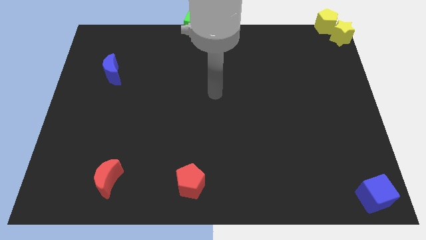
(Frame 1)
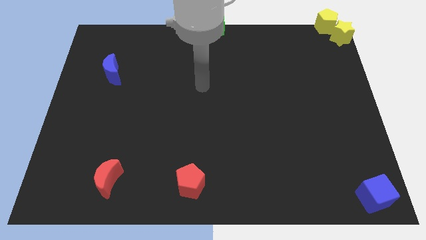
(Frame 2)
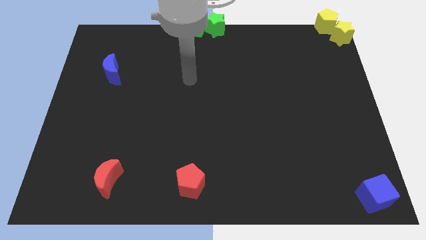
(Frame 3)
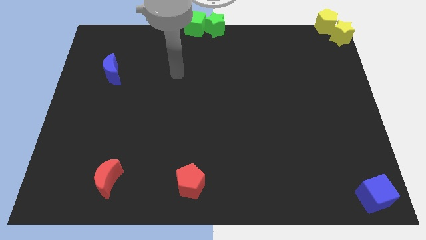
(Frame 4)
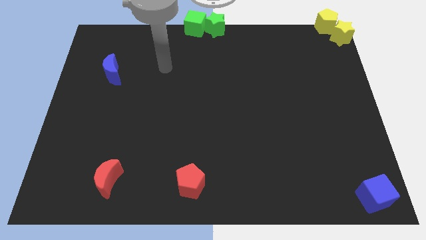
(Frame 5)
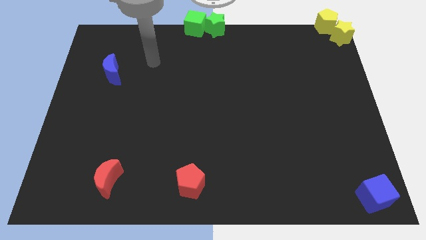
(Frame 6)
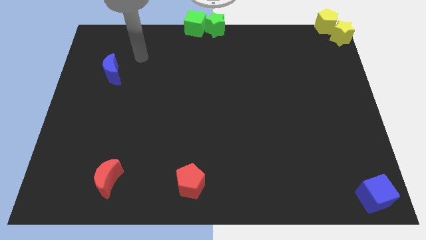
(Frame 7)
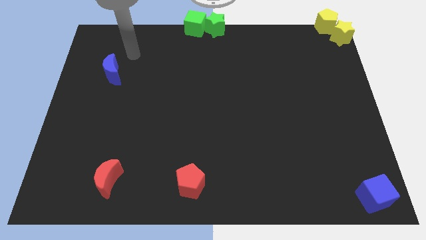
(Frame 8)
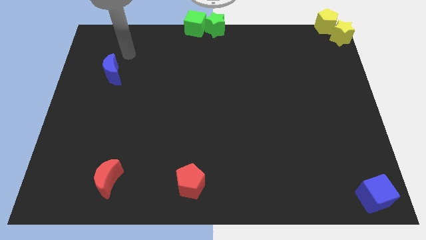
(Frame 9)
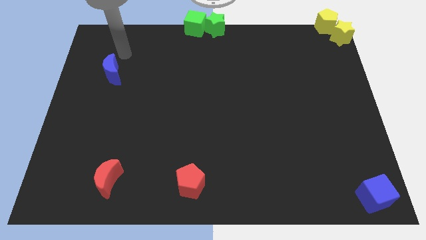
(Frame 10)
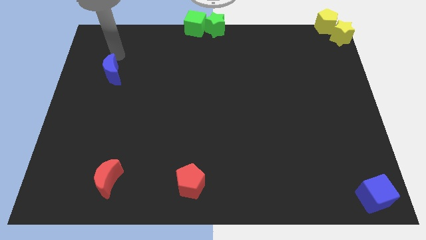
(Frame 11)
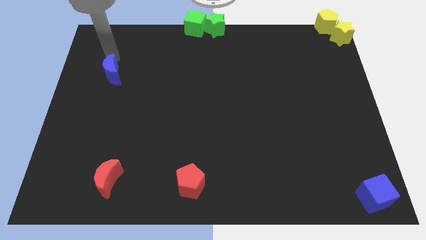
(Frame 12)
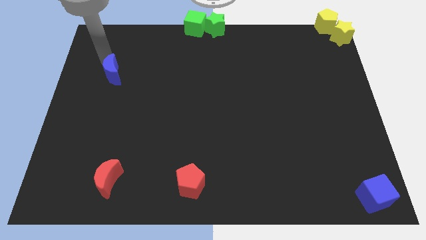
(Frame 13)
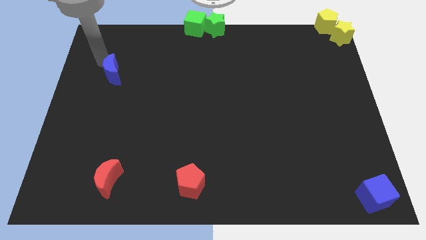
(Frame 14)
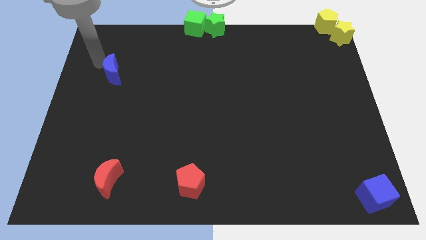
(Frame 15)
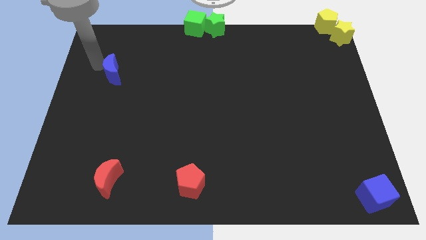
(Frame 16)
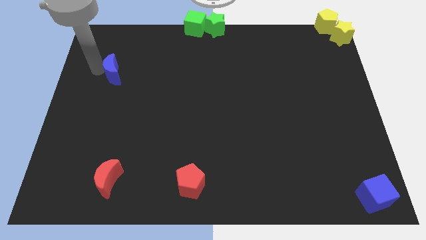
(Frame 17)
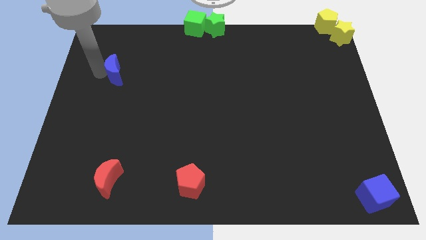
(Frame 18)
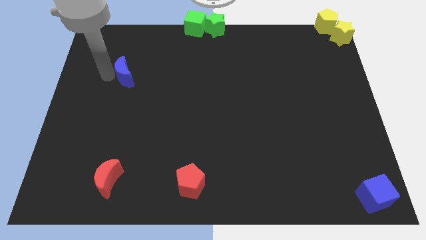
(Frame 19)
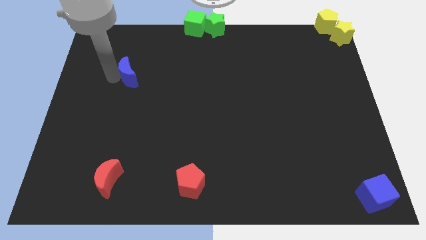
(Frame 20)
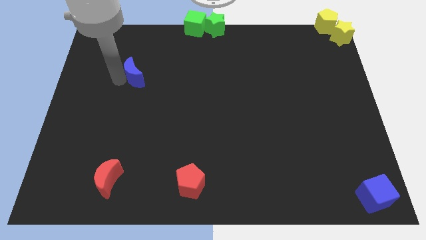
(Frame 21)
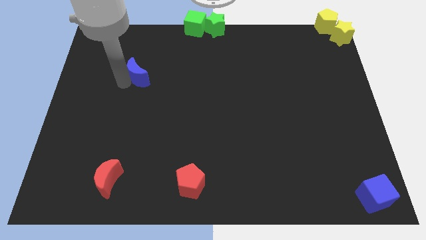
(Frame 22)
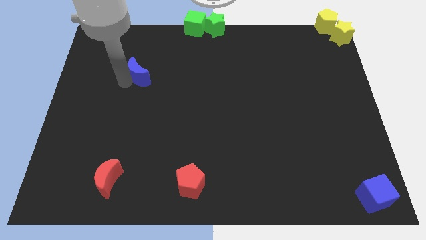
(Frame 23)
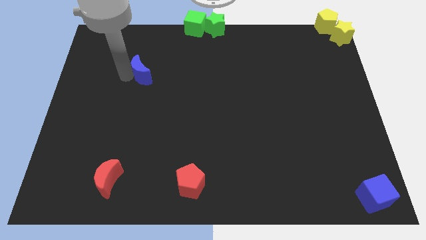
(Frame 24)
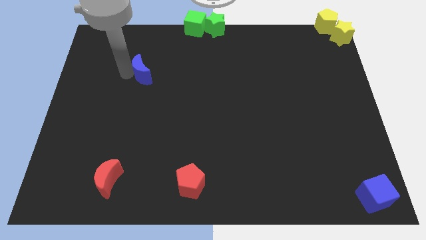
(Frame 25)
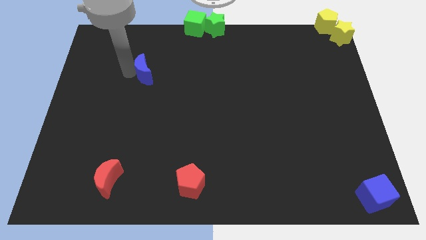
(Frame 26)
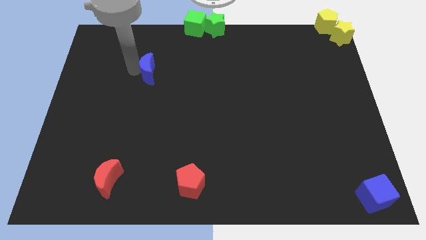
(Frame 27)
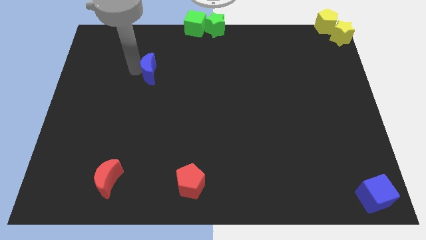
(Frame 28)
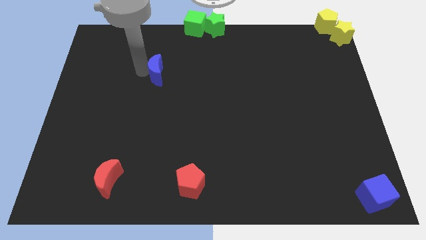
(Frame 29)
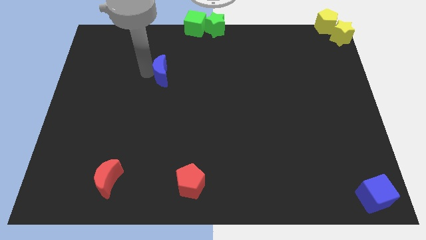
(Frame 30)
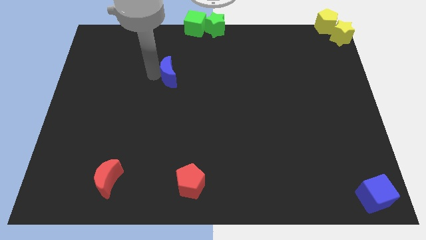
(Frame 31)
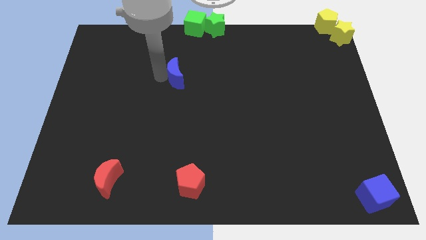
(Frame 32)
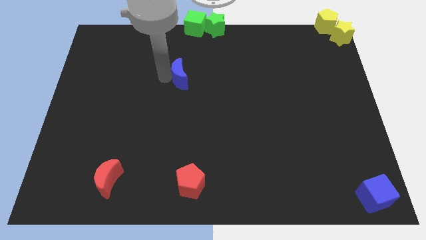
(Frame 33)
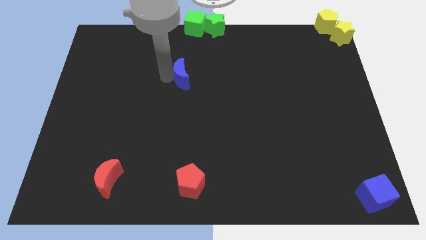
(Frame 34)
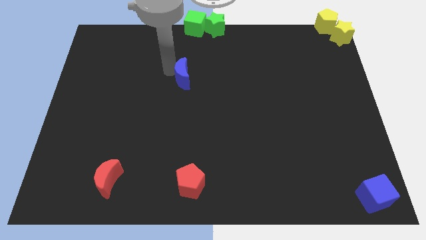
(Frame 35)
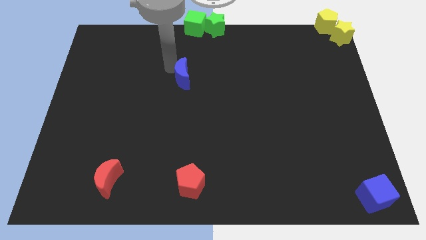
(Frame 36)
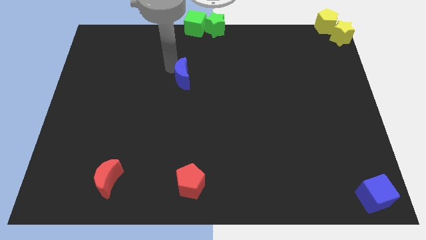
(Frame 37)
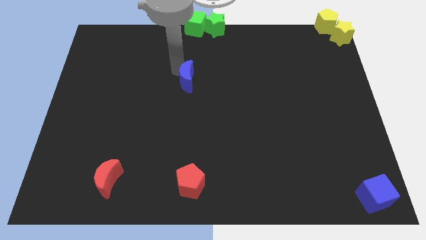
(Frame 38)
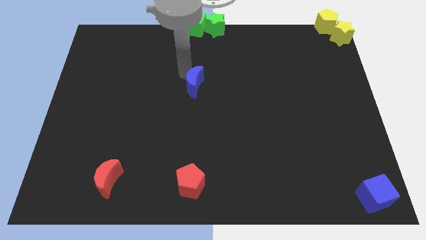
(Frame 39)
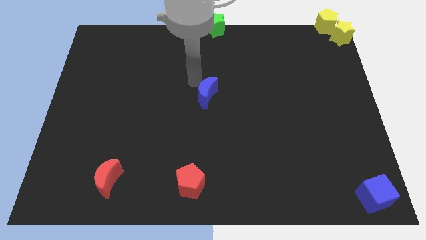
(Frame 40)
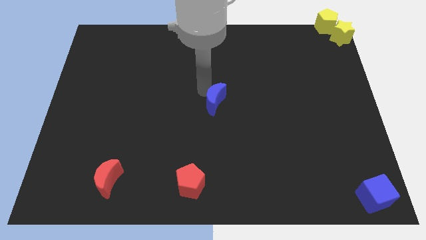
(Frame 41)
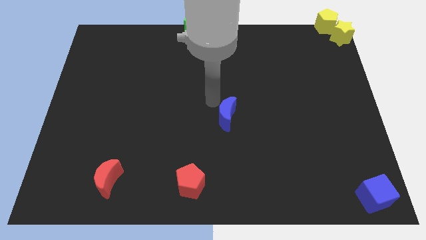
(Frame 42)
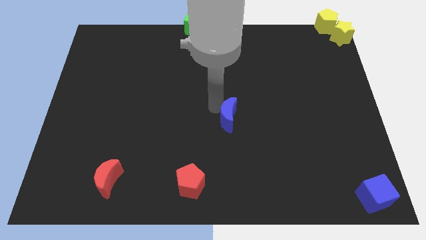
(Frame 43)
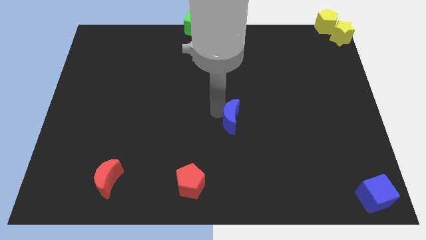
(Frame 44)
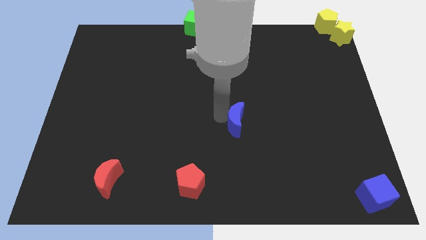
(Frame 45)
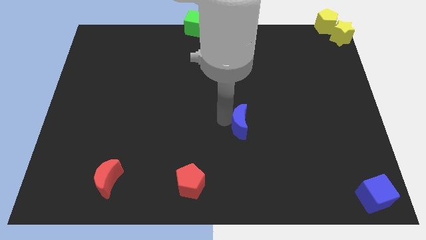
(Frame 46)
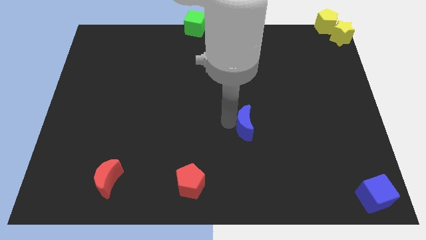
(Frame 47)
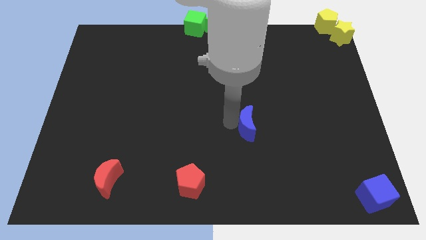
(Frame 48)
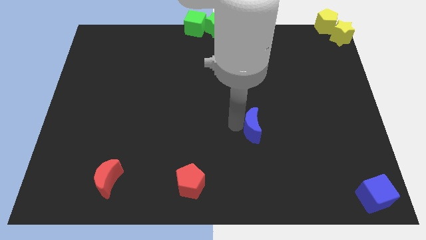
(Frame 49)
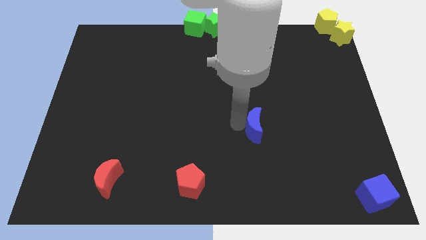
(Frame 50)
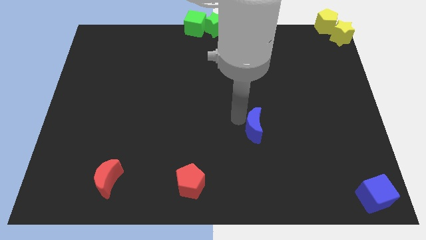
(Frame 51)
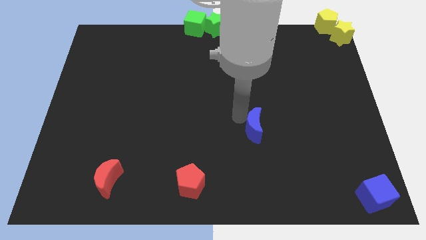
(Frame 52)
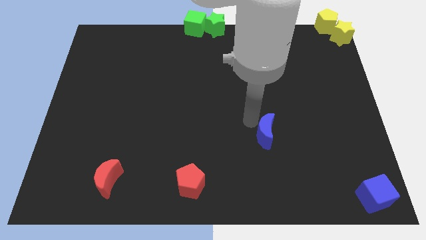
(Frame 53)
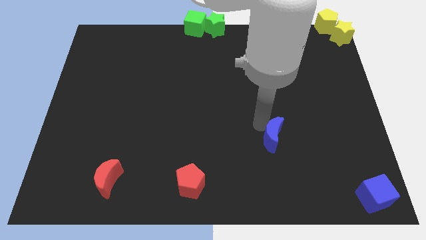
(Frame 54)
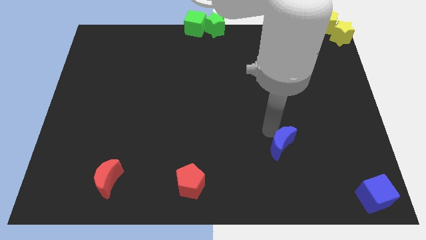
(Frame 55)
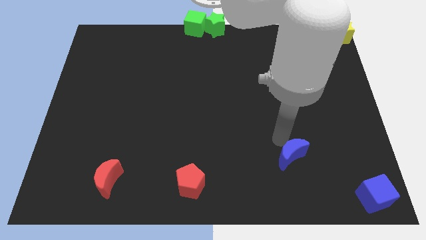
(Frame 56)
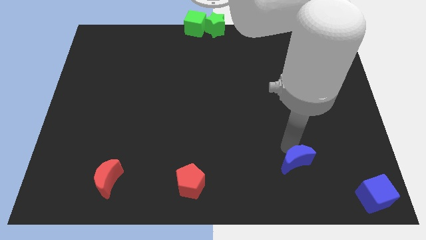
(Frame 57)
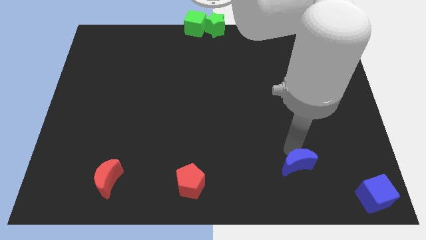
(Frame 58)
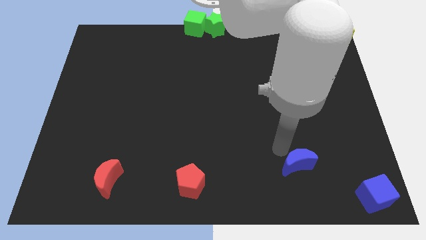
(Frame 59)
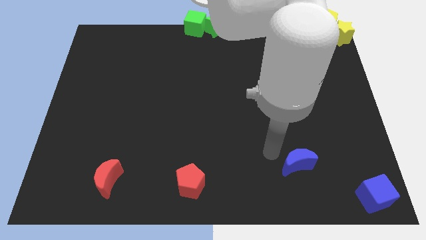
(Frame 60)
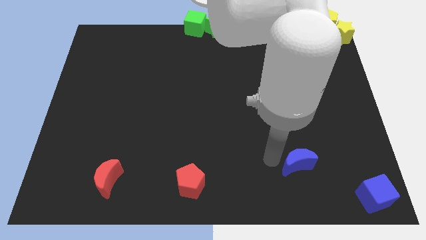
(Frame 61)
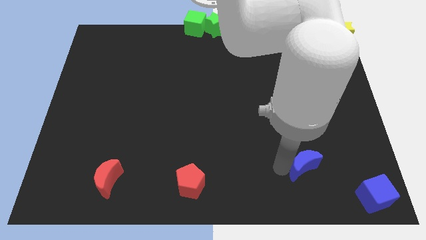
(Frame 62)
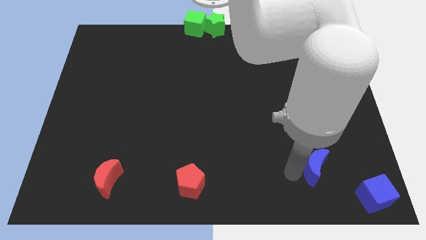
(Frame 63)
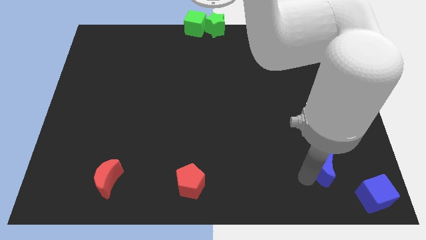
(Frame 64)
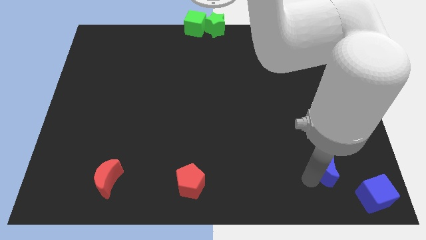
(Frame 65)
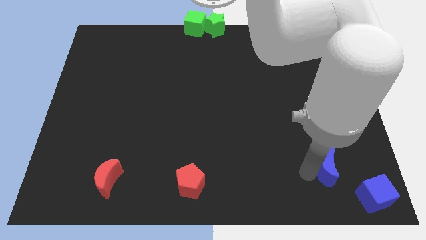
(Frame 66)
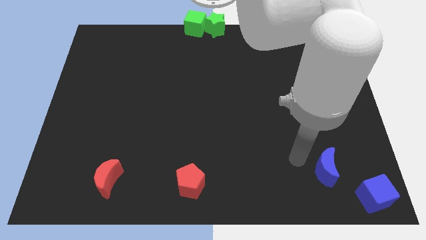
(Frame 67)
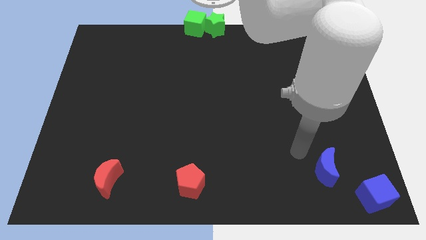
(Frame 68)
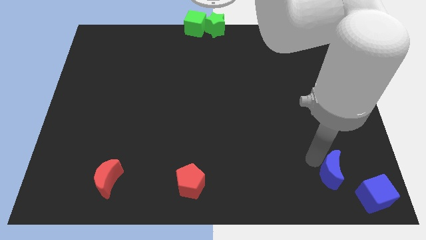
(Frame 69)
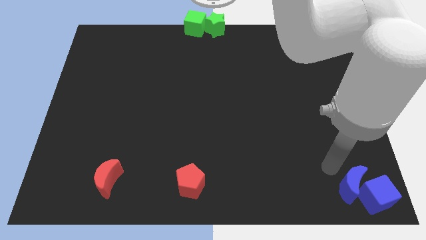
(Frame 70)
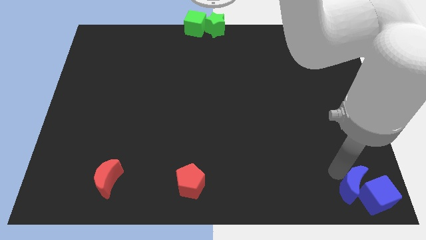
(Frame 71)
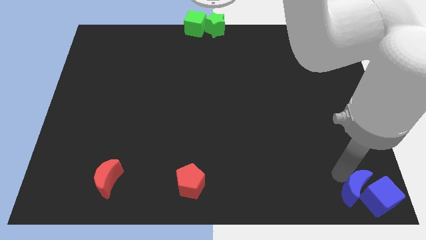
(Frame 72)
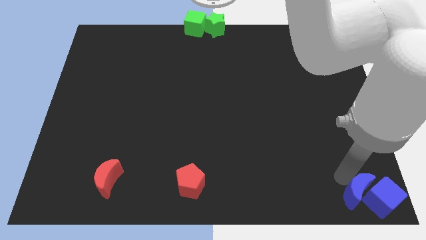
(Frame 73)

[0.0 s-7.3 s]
push the blue crescent into the blue cube

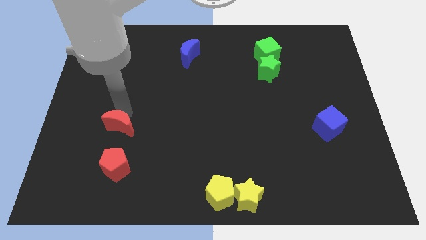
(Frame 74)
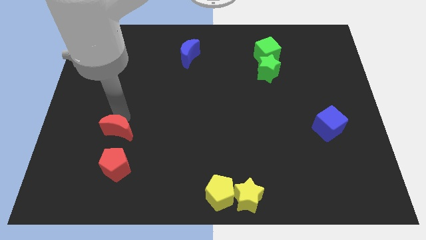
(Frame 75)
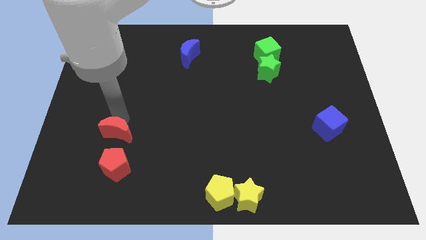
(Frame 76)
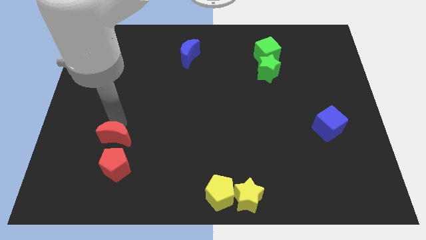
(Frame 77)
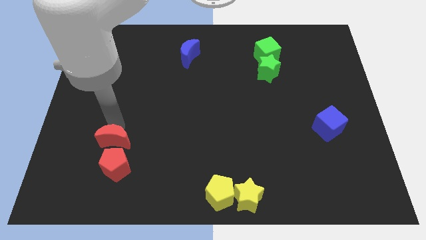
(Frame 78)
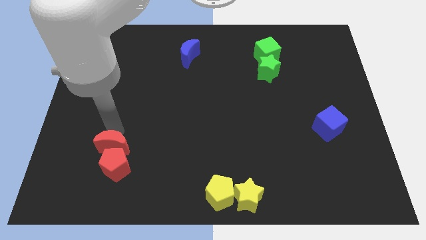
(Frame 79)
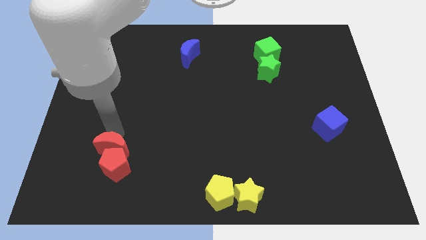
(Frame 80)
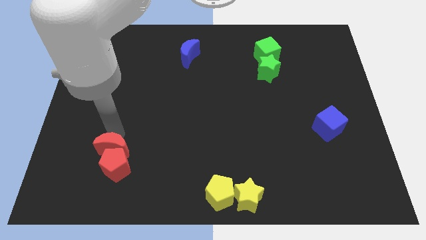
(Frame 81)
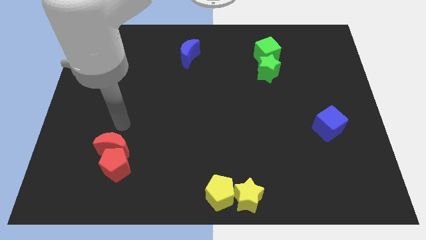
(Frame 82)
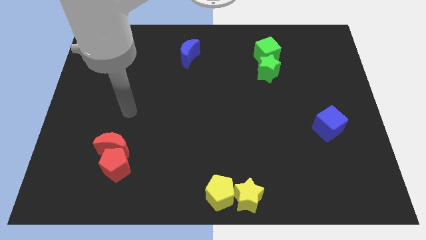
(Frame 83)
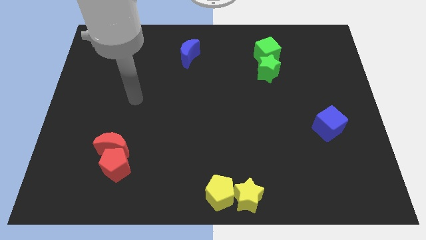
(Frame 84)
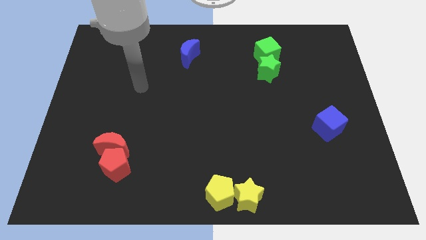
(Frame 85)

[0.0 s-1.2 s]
place red moon above the red pentagon

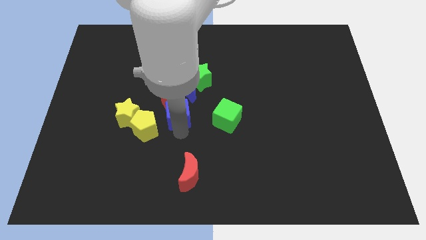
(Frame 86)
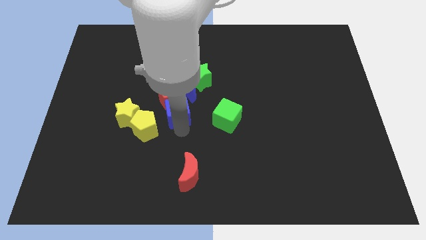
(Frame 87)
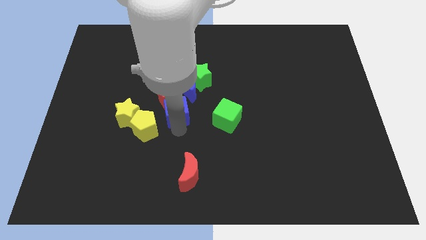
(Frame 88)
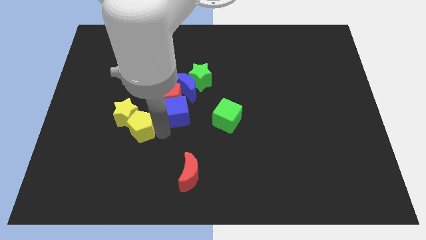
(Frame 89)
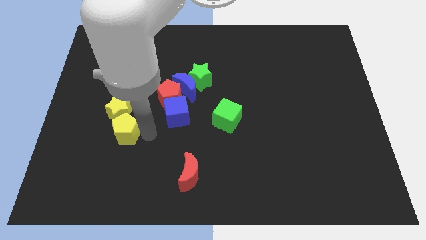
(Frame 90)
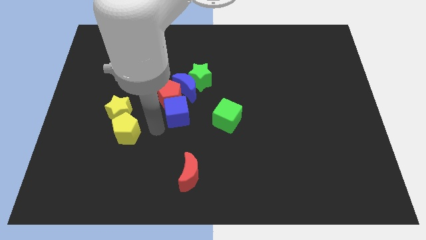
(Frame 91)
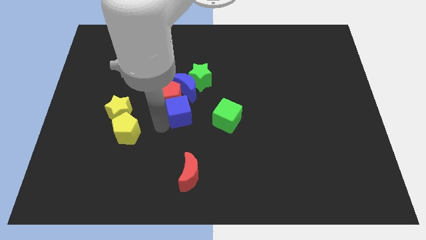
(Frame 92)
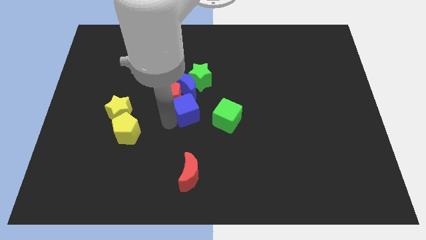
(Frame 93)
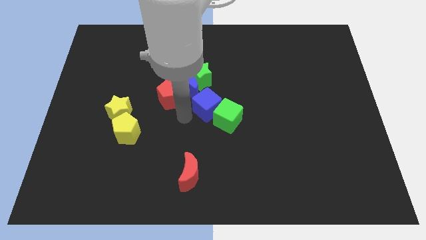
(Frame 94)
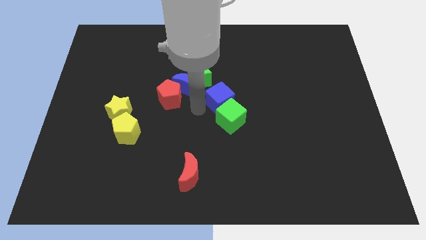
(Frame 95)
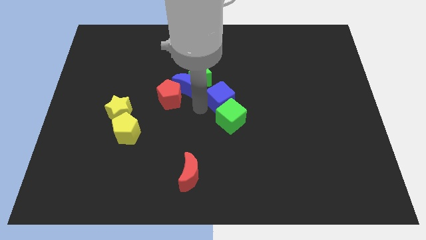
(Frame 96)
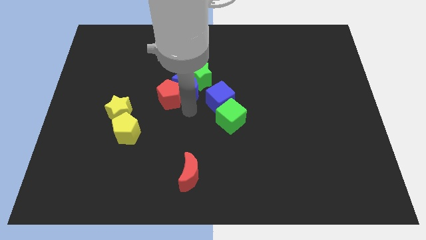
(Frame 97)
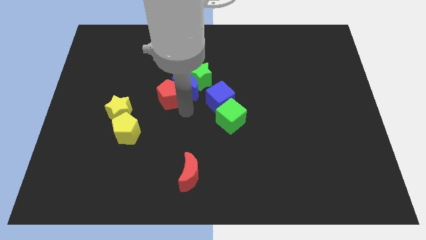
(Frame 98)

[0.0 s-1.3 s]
place the blue cube in between the green blocks
